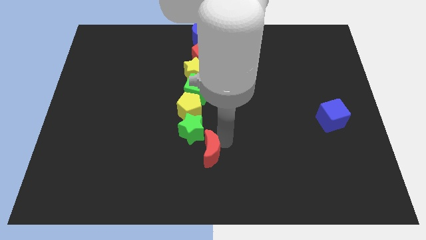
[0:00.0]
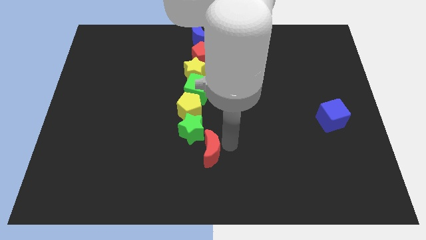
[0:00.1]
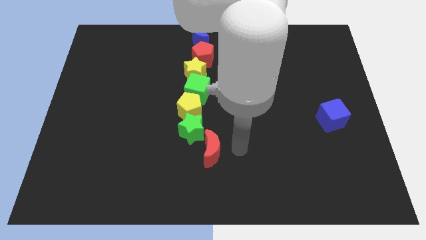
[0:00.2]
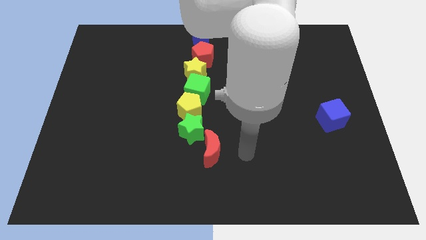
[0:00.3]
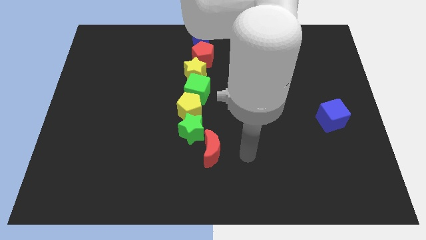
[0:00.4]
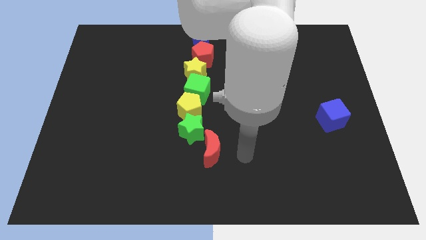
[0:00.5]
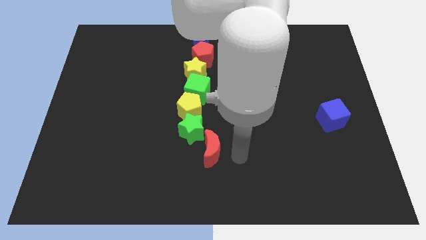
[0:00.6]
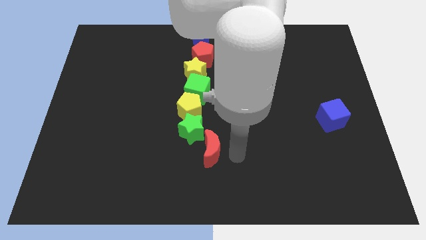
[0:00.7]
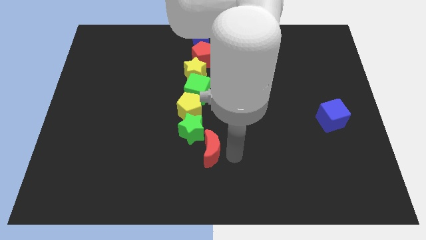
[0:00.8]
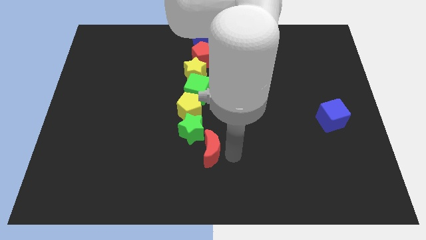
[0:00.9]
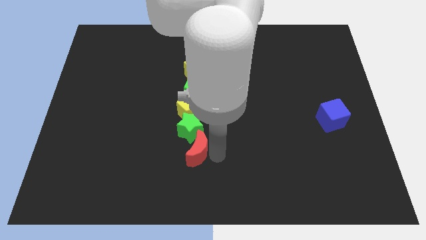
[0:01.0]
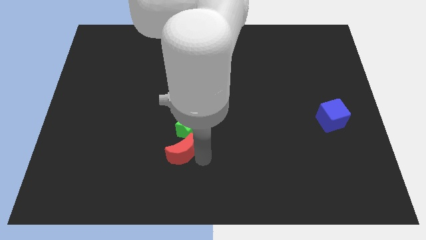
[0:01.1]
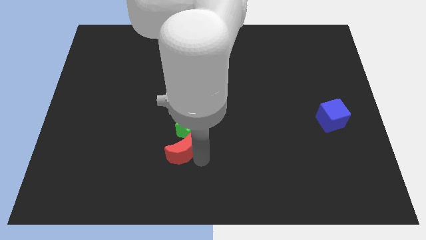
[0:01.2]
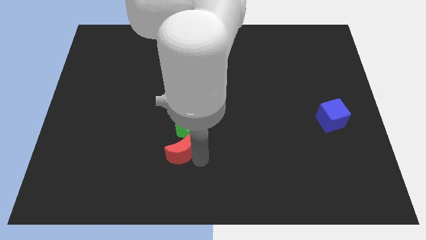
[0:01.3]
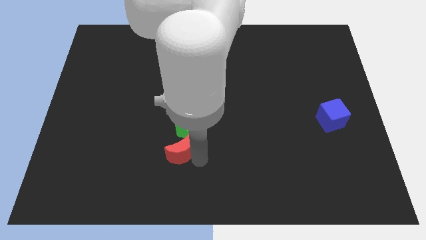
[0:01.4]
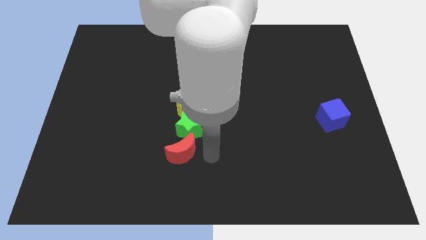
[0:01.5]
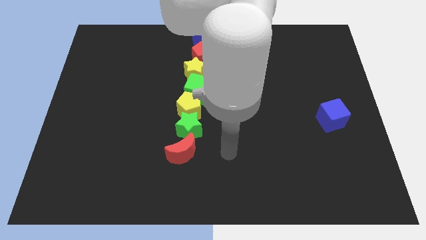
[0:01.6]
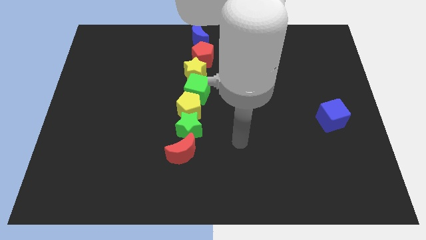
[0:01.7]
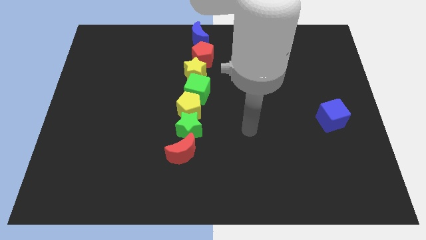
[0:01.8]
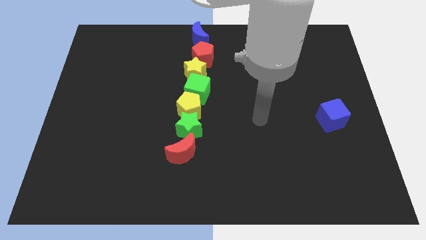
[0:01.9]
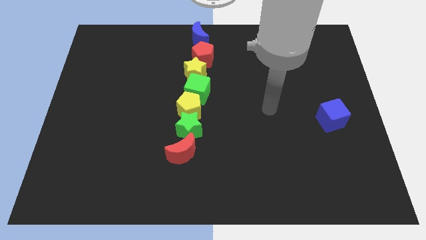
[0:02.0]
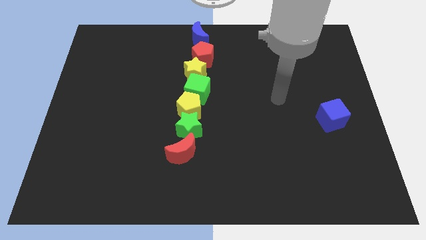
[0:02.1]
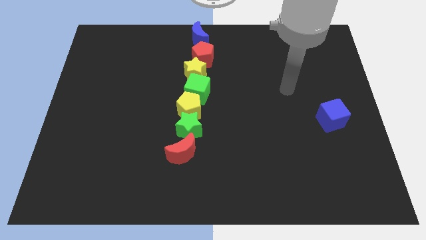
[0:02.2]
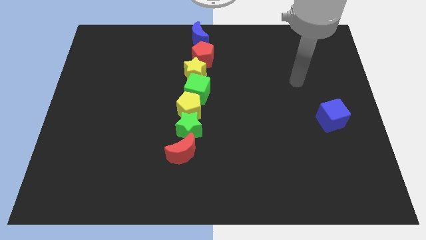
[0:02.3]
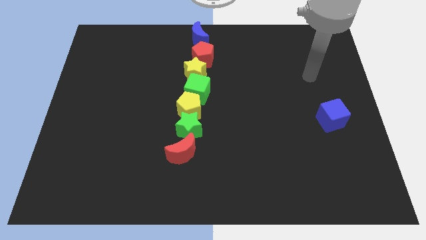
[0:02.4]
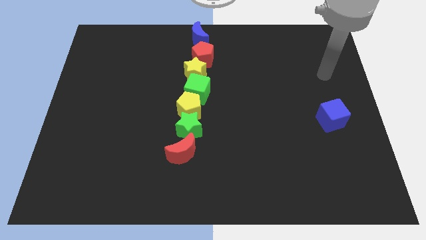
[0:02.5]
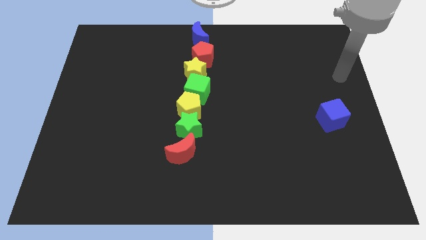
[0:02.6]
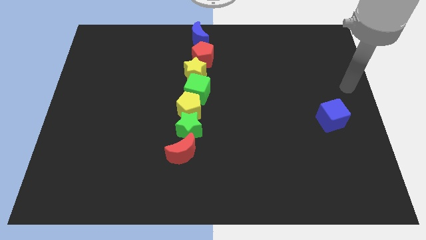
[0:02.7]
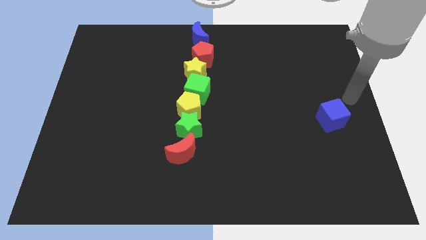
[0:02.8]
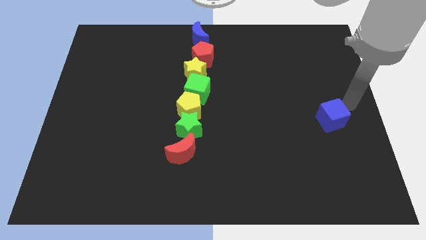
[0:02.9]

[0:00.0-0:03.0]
move the red crescent below the green star

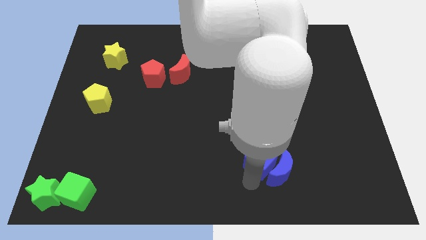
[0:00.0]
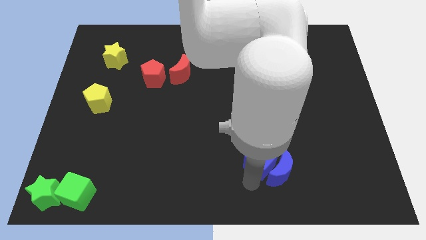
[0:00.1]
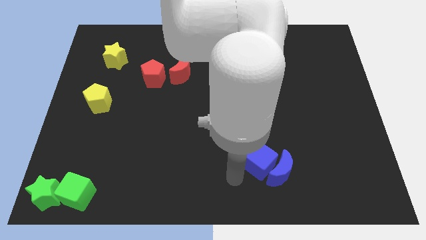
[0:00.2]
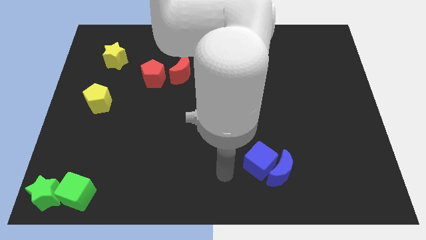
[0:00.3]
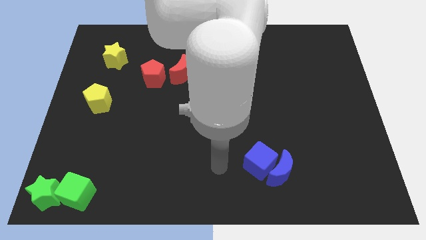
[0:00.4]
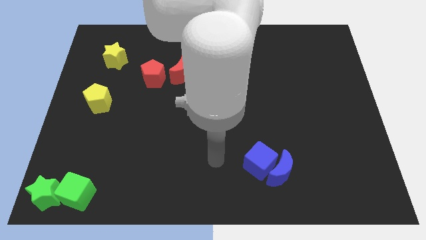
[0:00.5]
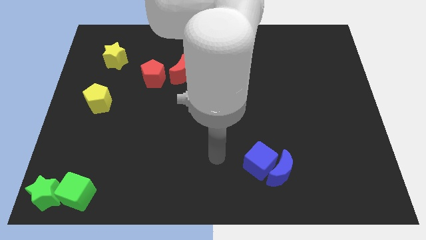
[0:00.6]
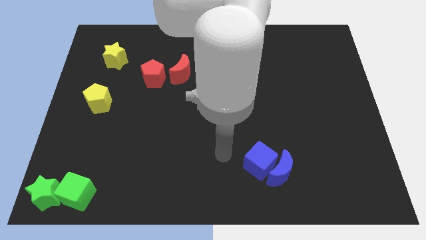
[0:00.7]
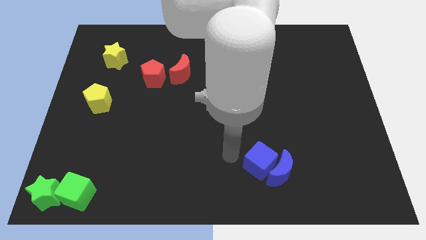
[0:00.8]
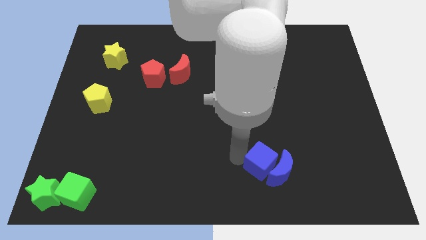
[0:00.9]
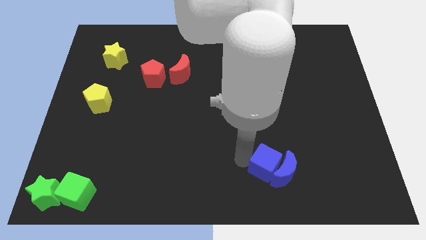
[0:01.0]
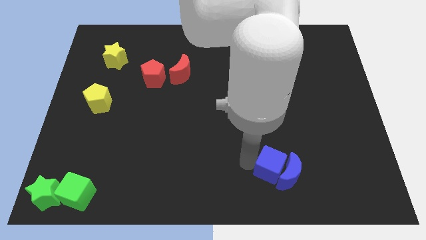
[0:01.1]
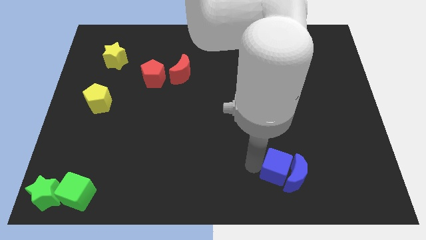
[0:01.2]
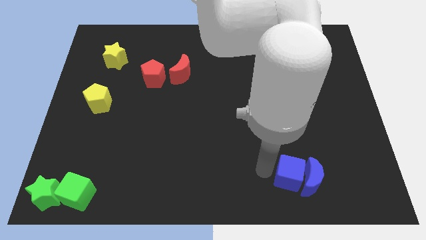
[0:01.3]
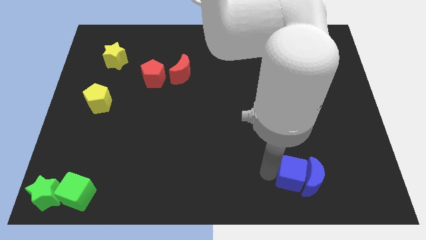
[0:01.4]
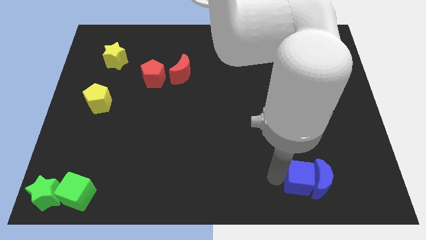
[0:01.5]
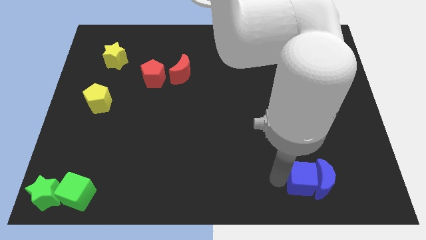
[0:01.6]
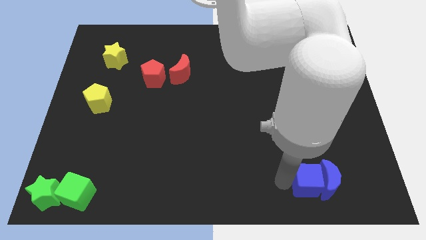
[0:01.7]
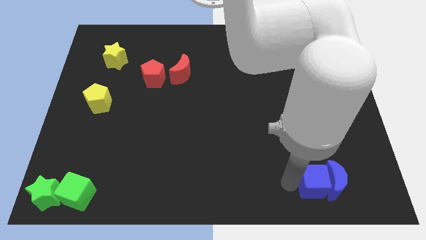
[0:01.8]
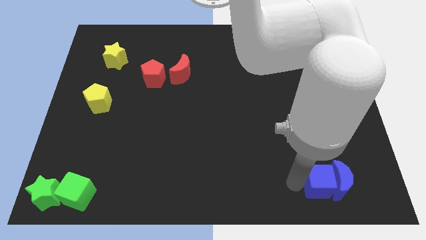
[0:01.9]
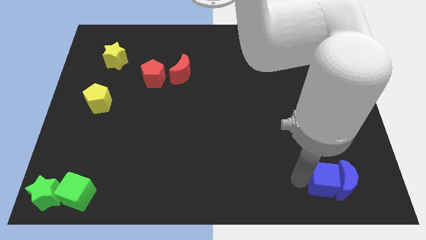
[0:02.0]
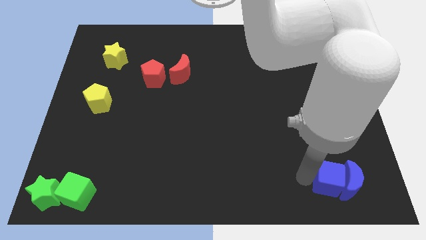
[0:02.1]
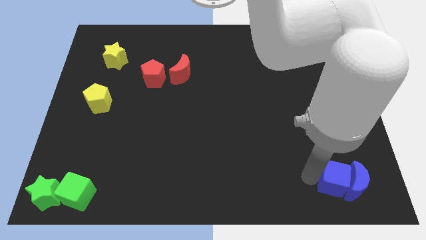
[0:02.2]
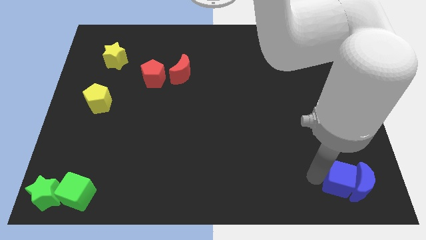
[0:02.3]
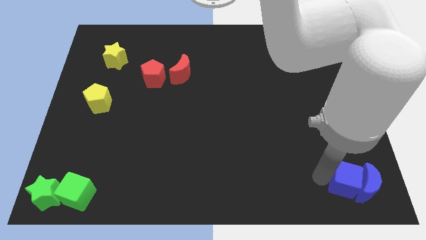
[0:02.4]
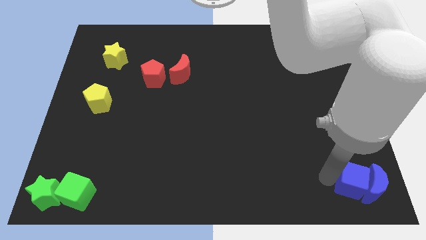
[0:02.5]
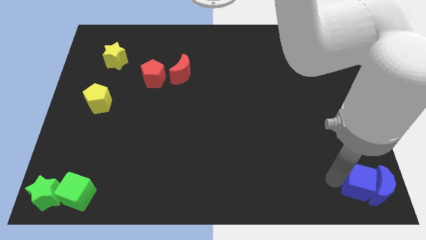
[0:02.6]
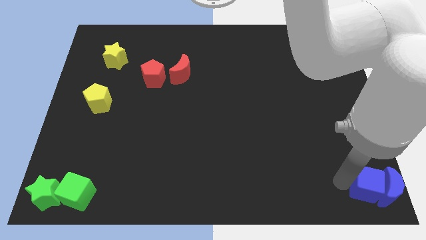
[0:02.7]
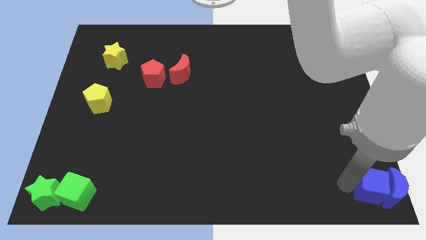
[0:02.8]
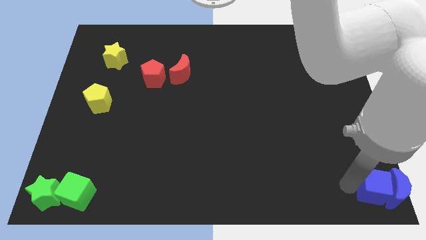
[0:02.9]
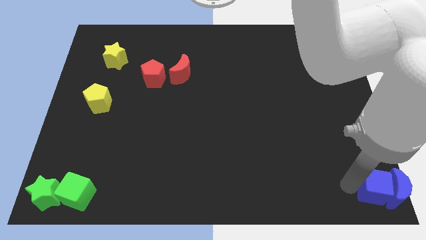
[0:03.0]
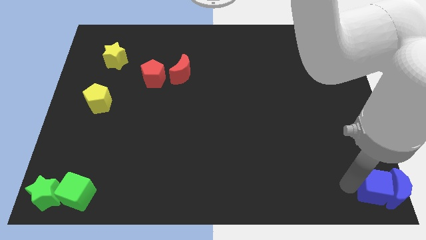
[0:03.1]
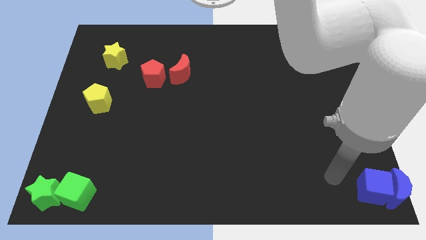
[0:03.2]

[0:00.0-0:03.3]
place blue blocks towards bottom right corner

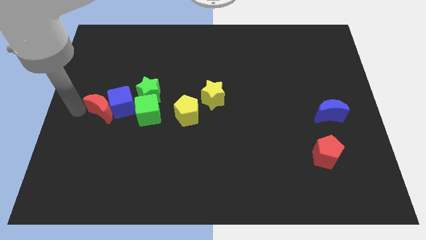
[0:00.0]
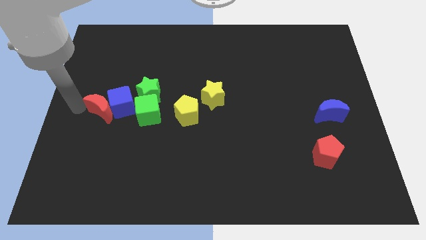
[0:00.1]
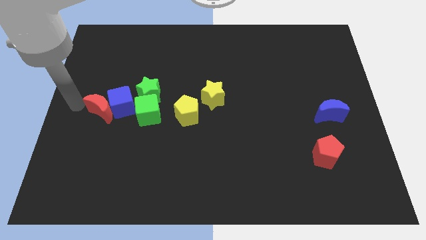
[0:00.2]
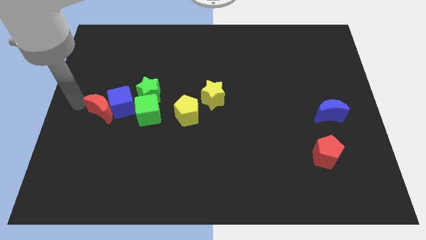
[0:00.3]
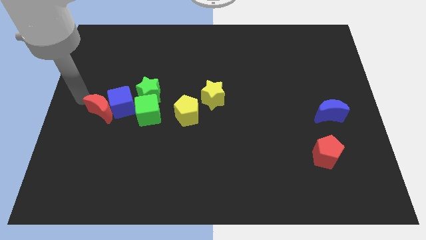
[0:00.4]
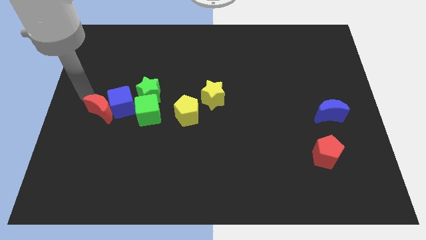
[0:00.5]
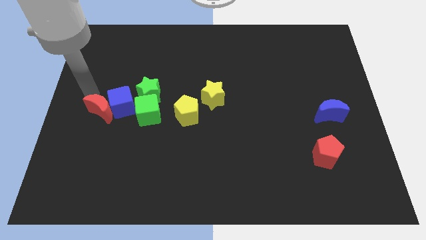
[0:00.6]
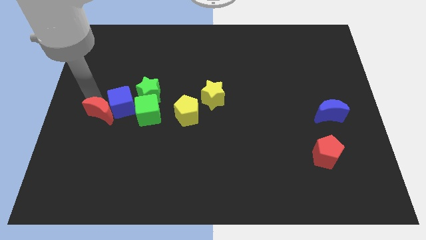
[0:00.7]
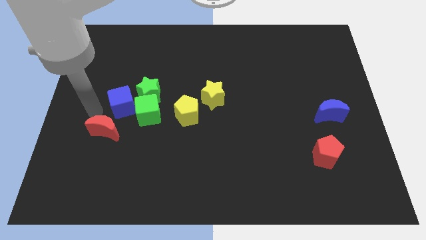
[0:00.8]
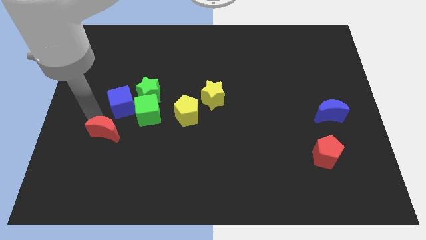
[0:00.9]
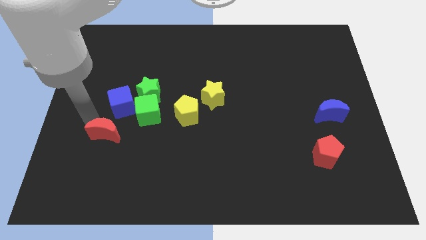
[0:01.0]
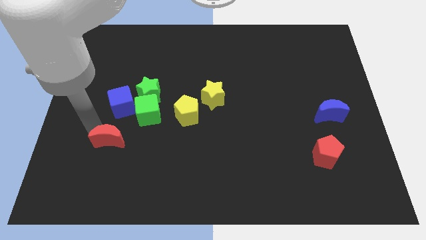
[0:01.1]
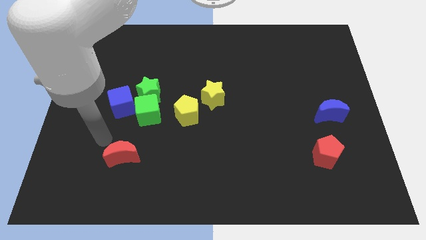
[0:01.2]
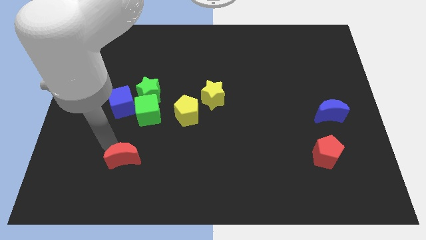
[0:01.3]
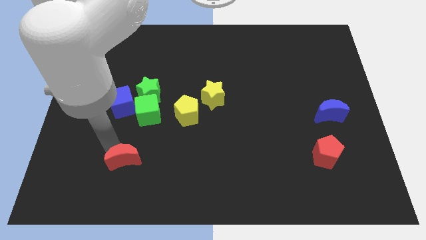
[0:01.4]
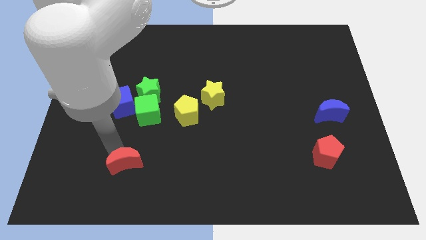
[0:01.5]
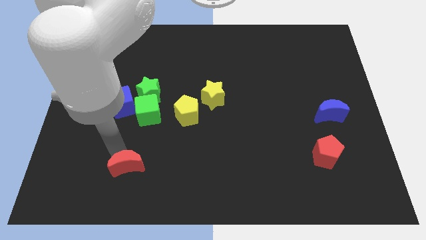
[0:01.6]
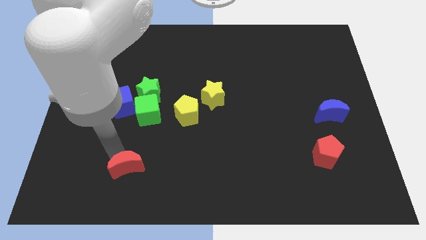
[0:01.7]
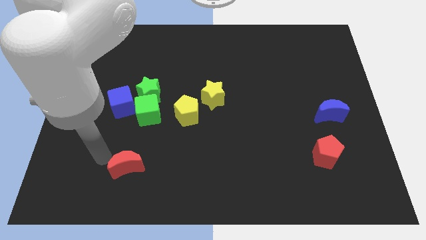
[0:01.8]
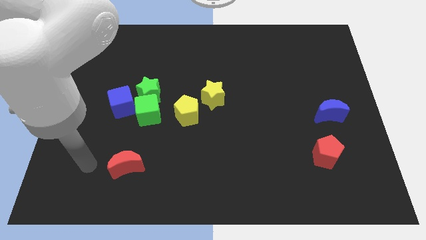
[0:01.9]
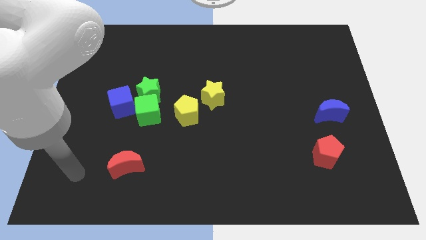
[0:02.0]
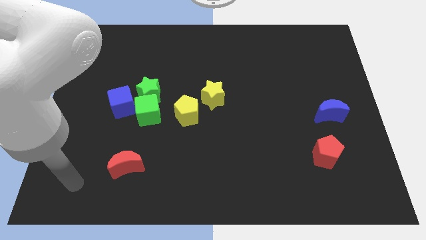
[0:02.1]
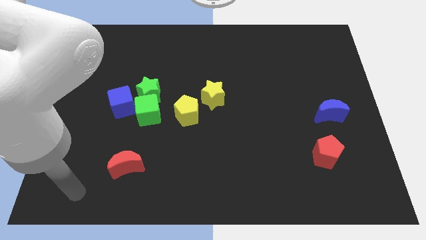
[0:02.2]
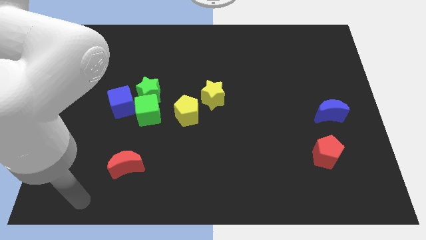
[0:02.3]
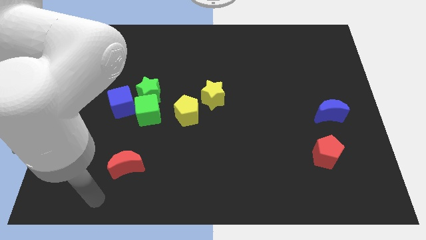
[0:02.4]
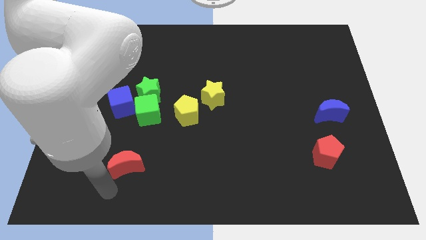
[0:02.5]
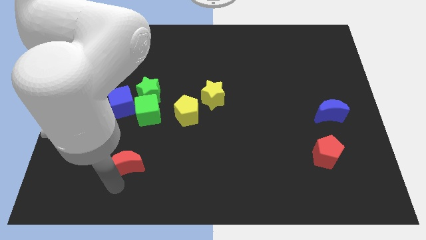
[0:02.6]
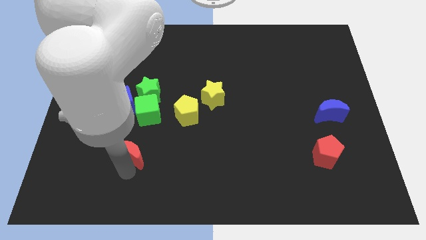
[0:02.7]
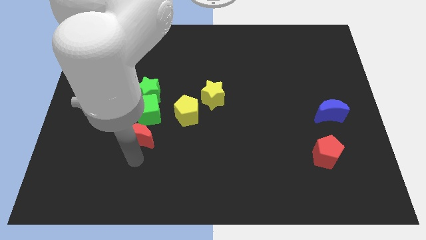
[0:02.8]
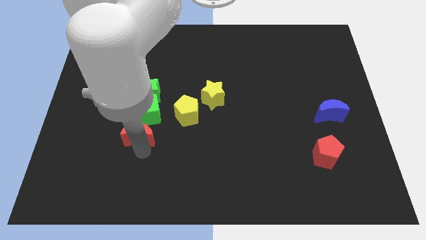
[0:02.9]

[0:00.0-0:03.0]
separate red moon from blue cube
